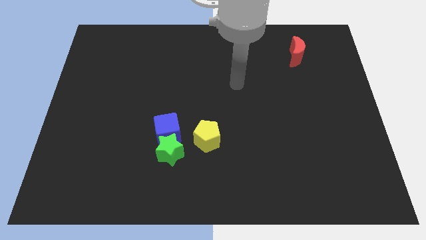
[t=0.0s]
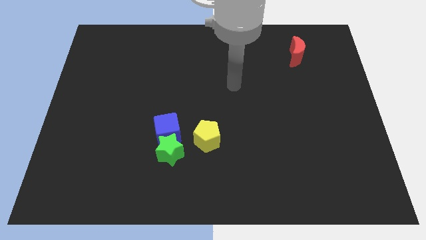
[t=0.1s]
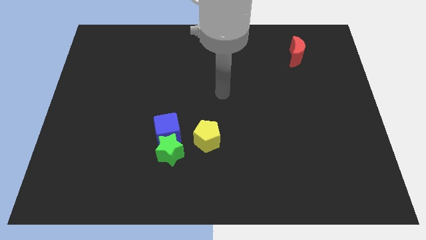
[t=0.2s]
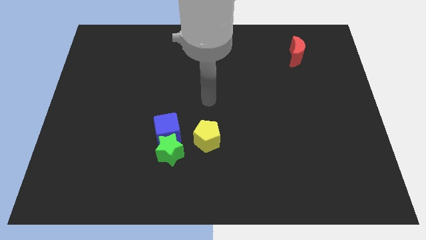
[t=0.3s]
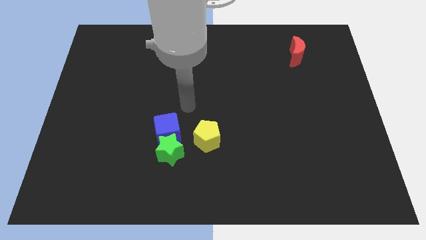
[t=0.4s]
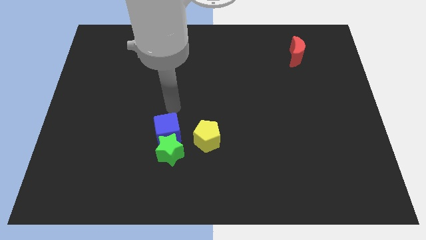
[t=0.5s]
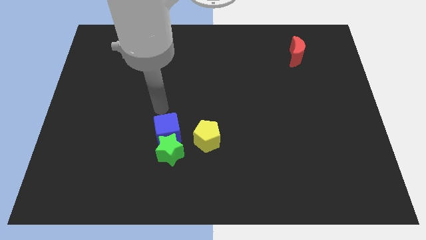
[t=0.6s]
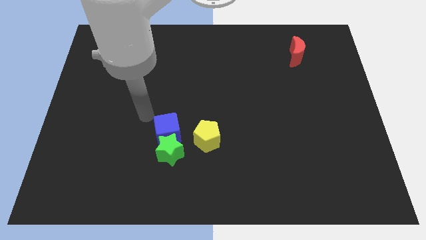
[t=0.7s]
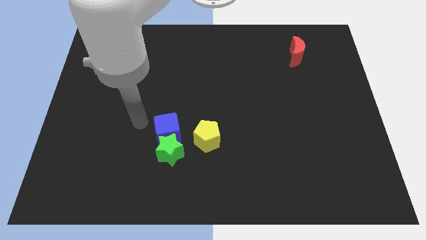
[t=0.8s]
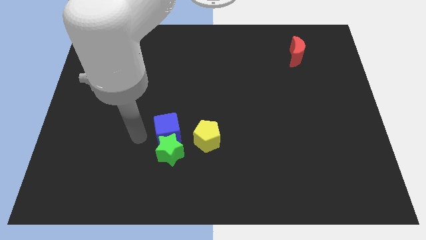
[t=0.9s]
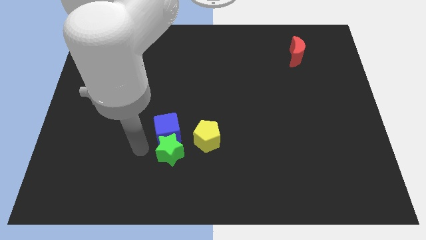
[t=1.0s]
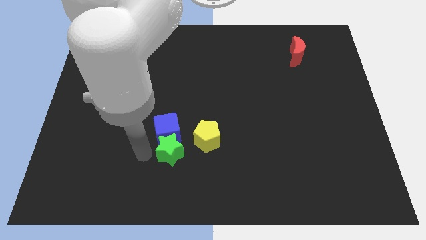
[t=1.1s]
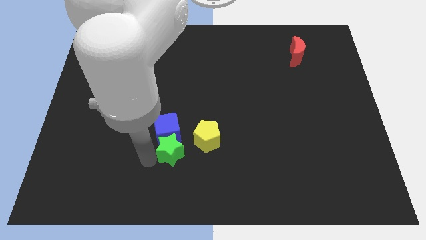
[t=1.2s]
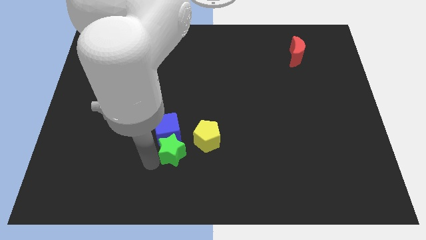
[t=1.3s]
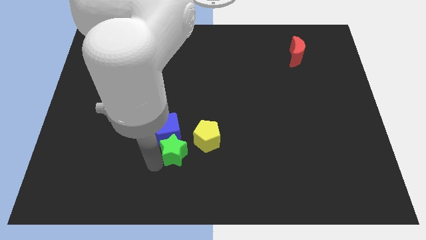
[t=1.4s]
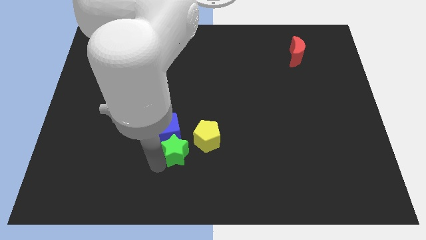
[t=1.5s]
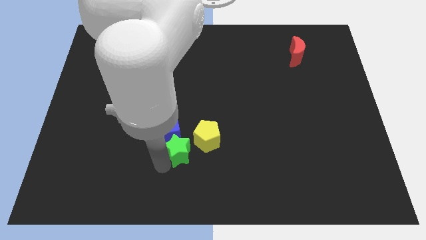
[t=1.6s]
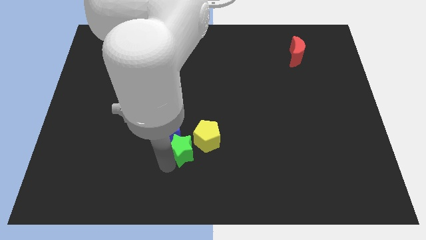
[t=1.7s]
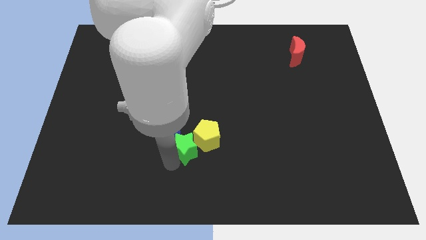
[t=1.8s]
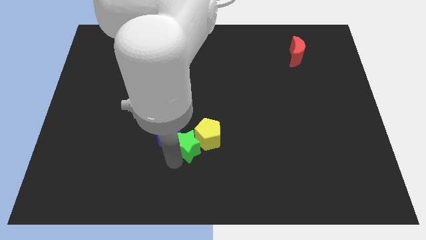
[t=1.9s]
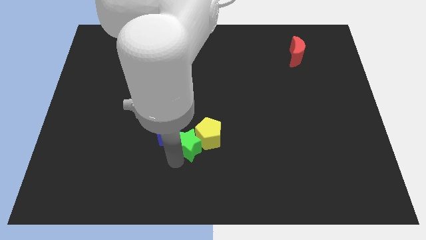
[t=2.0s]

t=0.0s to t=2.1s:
push the green block close to the pentagon

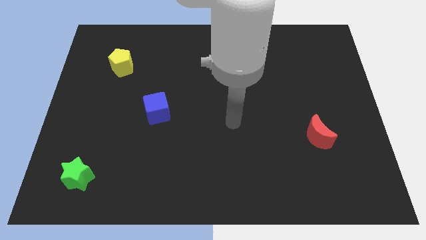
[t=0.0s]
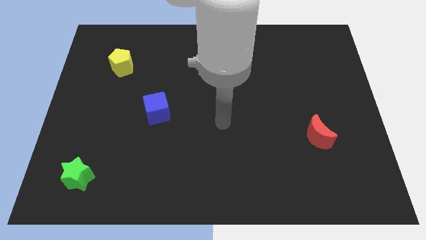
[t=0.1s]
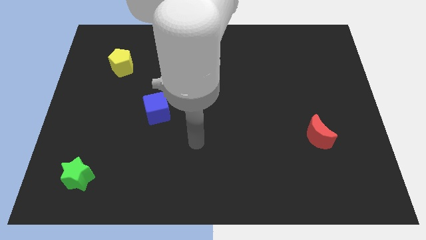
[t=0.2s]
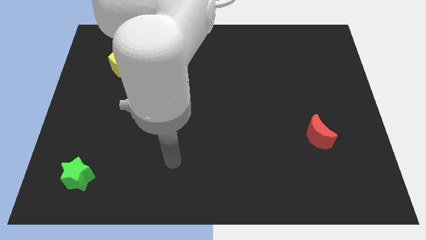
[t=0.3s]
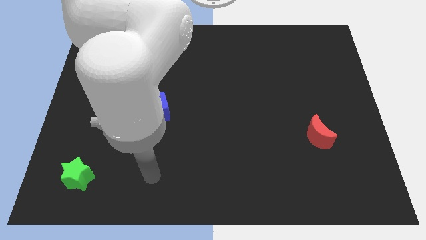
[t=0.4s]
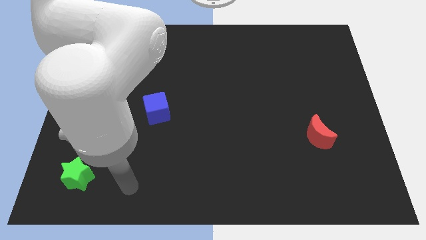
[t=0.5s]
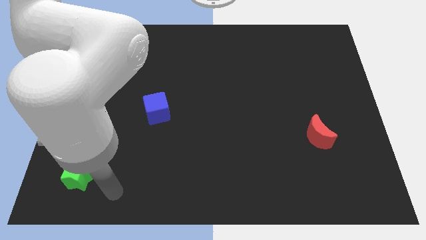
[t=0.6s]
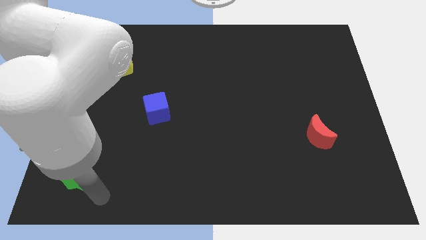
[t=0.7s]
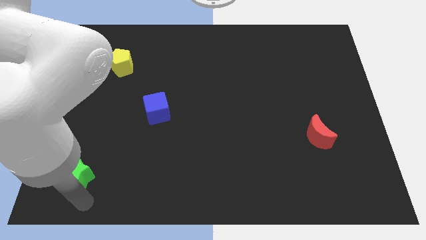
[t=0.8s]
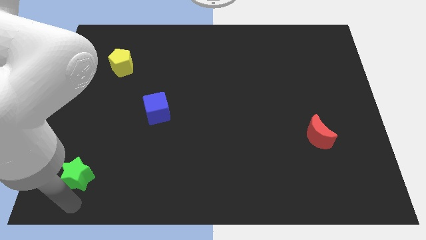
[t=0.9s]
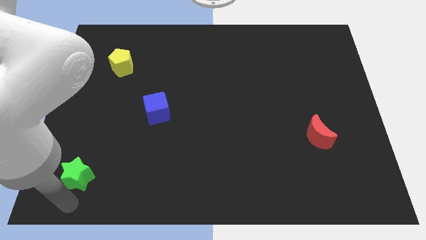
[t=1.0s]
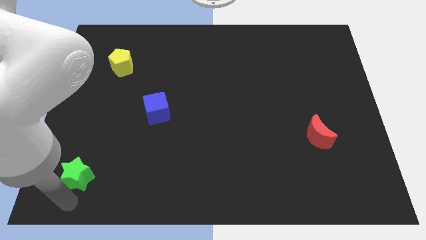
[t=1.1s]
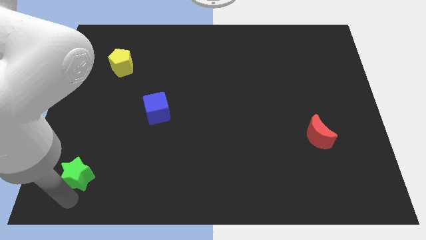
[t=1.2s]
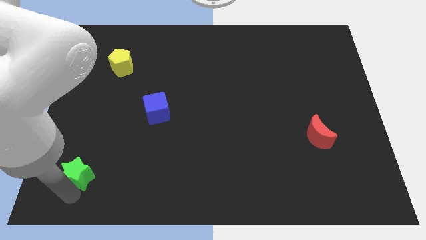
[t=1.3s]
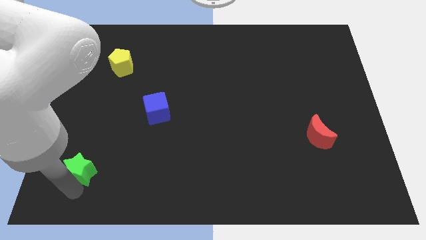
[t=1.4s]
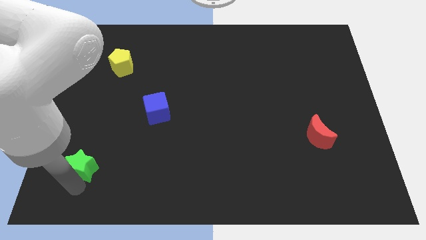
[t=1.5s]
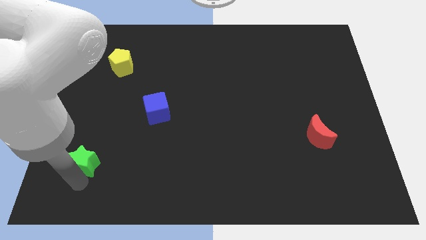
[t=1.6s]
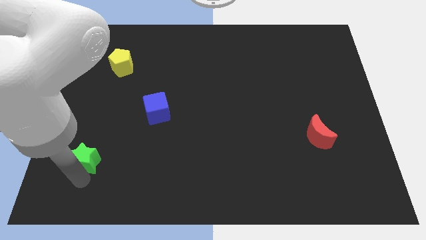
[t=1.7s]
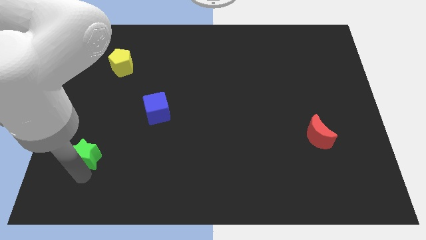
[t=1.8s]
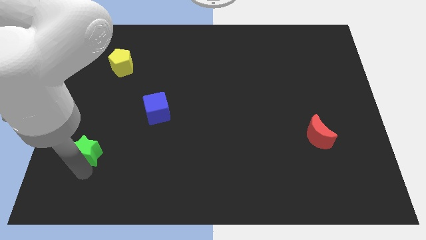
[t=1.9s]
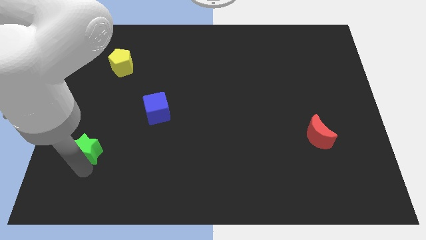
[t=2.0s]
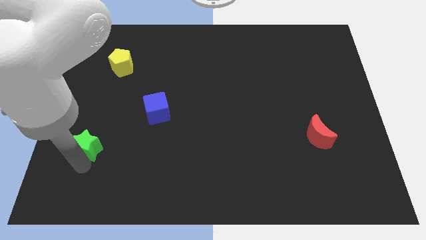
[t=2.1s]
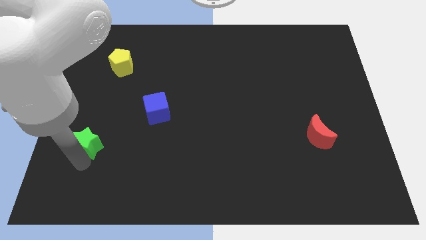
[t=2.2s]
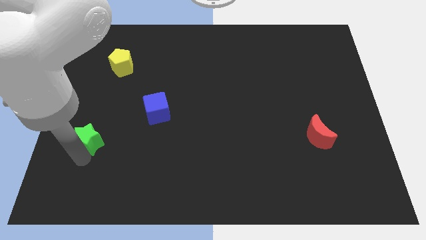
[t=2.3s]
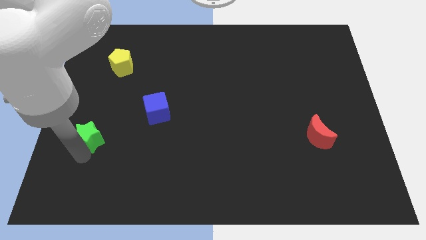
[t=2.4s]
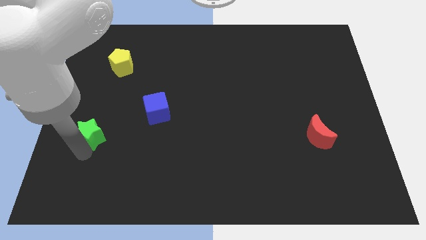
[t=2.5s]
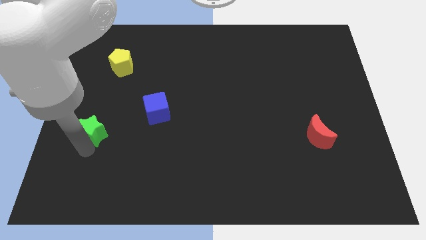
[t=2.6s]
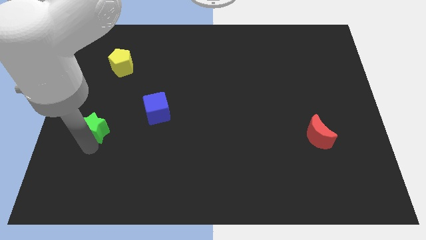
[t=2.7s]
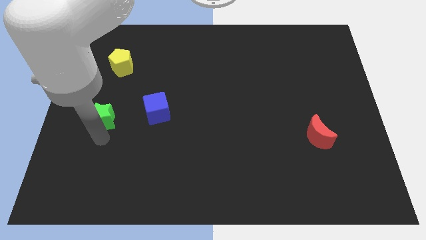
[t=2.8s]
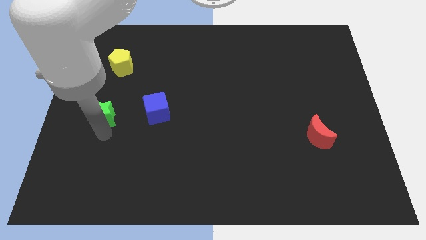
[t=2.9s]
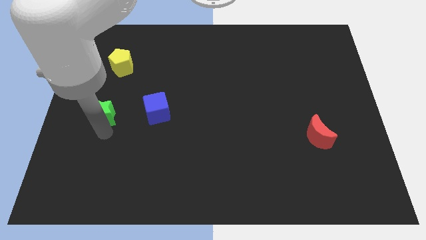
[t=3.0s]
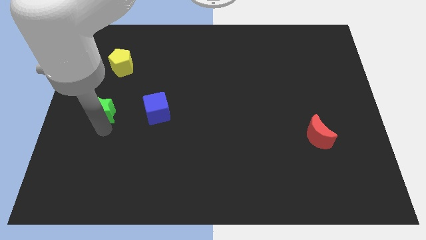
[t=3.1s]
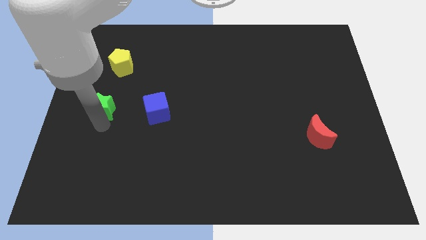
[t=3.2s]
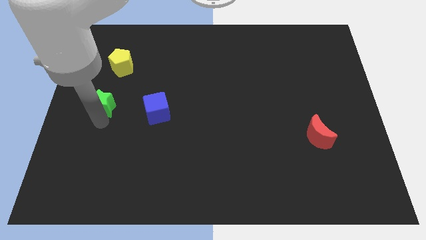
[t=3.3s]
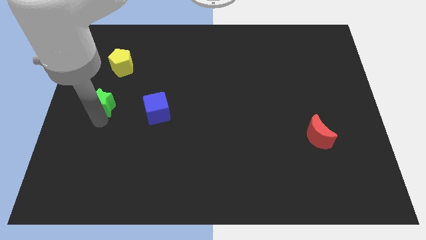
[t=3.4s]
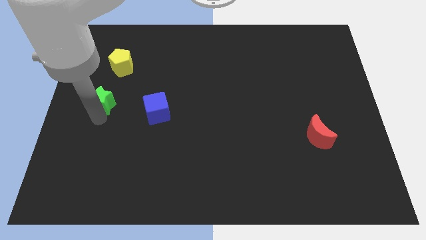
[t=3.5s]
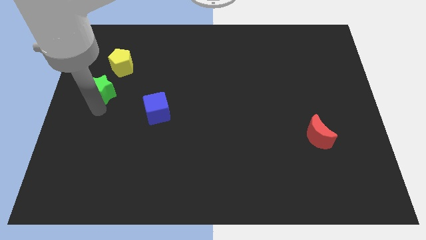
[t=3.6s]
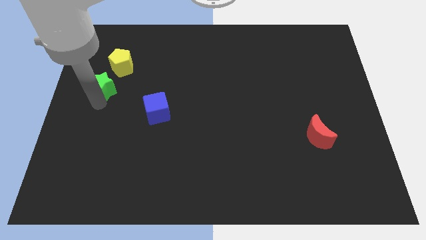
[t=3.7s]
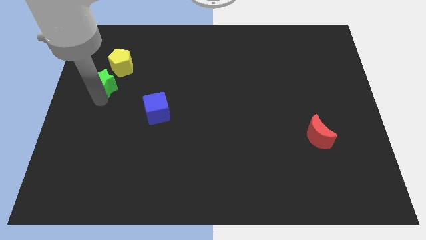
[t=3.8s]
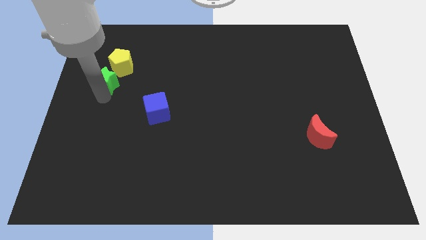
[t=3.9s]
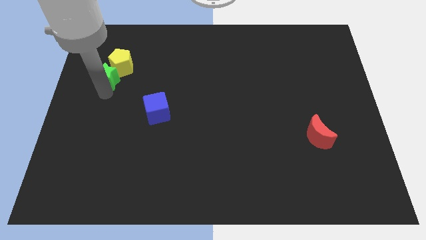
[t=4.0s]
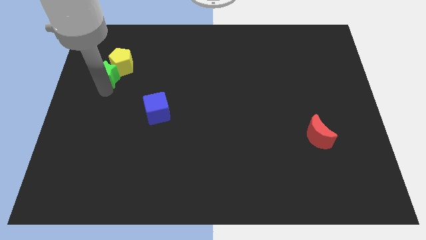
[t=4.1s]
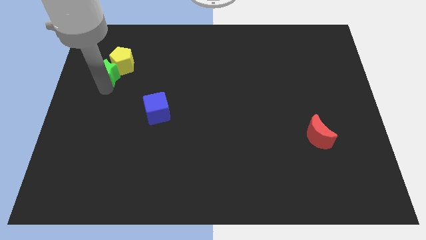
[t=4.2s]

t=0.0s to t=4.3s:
move the star towards the pentagon

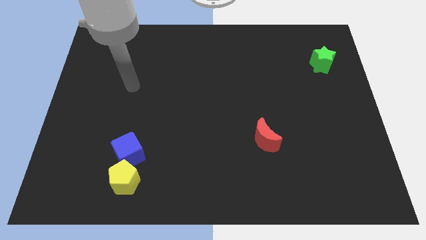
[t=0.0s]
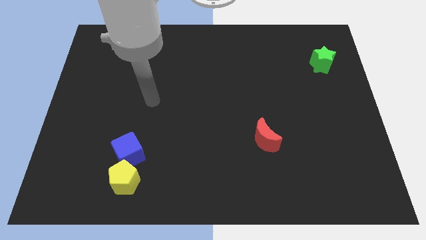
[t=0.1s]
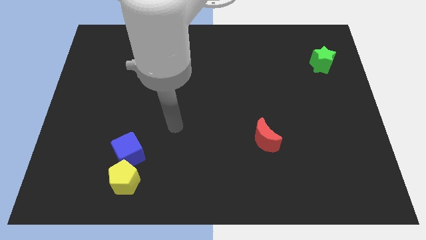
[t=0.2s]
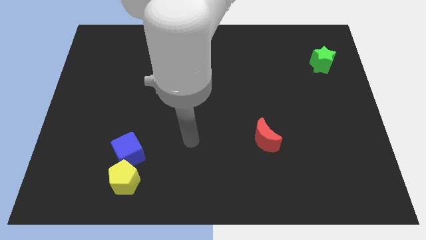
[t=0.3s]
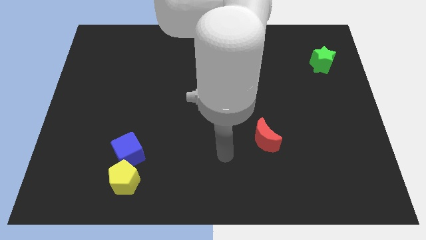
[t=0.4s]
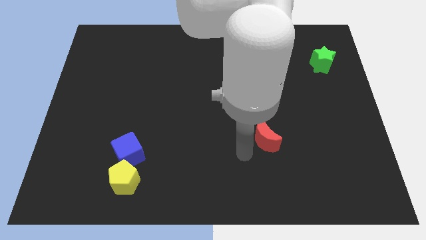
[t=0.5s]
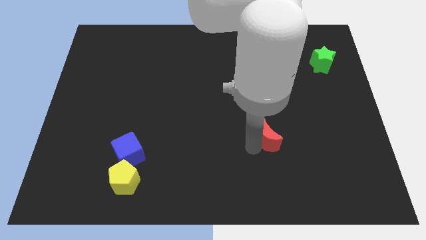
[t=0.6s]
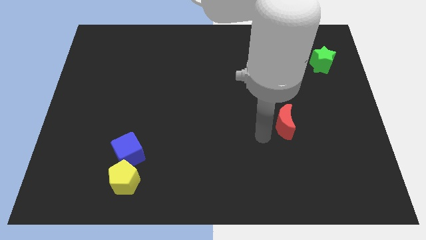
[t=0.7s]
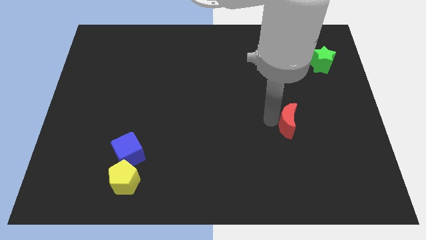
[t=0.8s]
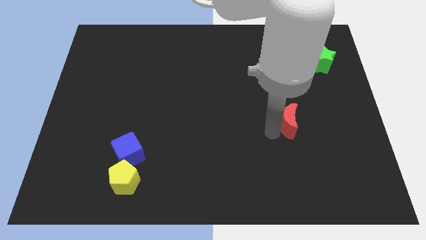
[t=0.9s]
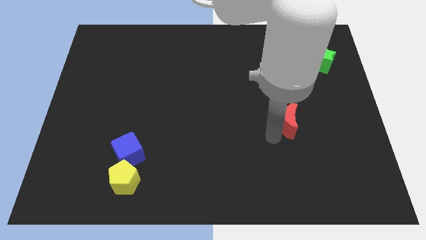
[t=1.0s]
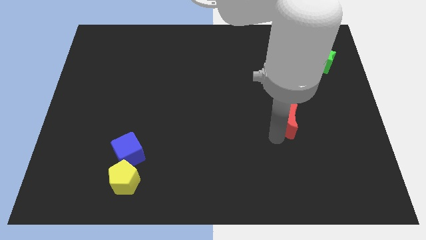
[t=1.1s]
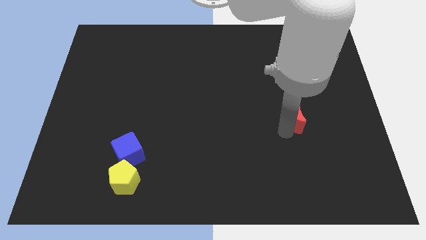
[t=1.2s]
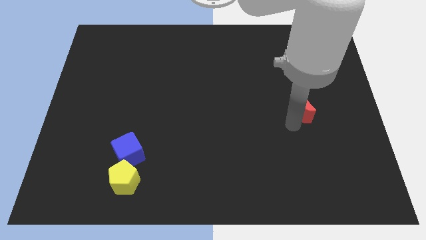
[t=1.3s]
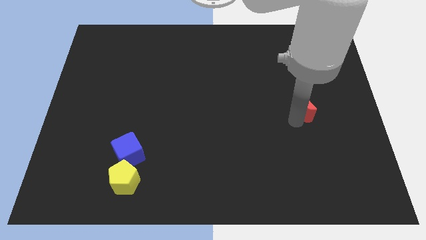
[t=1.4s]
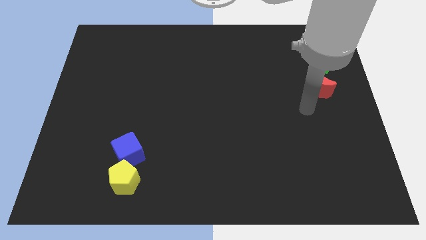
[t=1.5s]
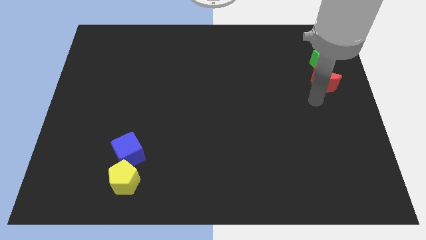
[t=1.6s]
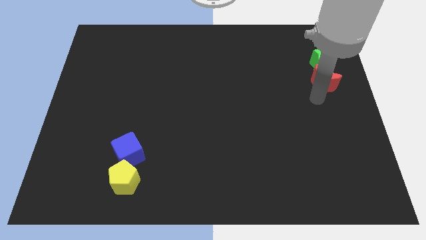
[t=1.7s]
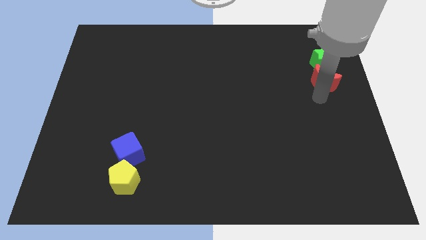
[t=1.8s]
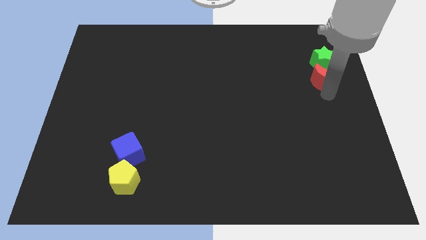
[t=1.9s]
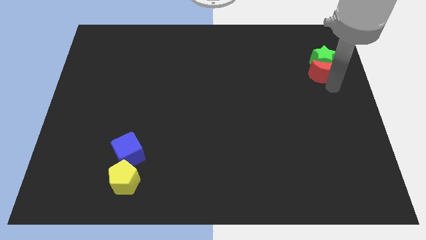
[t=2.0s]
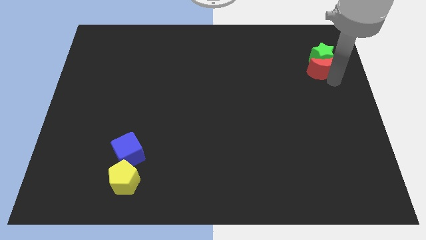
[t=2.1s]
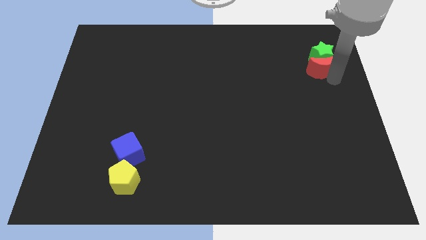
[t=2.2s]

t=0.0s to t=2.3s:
push the red moon close to the star
